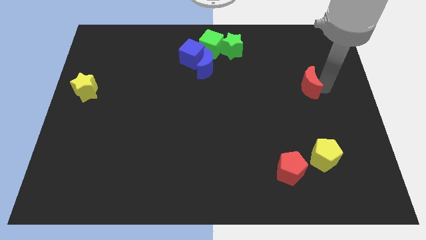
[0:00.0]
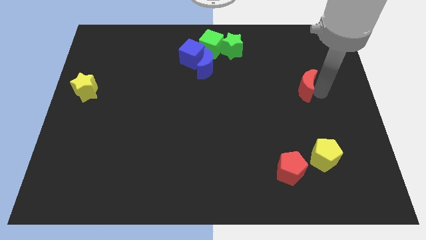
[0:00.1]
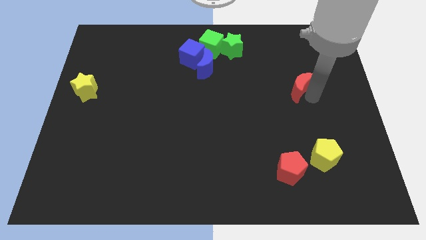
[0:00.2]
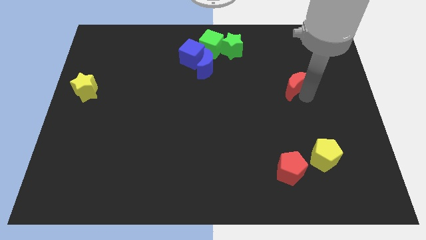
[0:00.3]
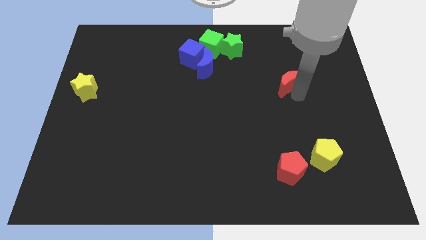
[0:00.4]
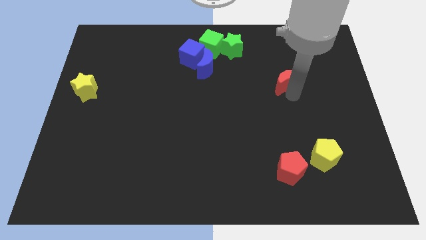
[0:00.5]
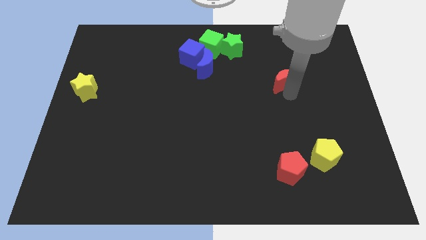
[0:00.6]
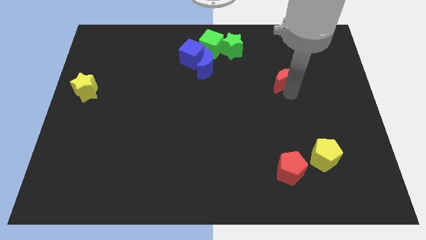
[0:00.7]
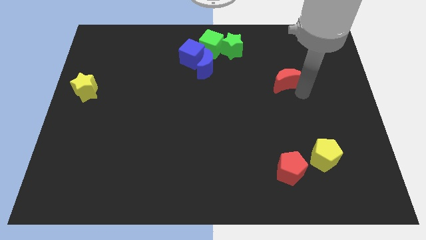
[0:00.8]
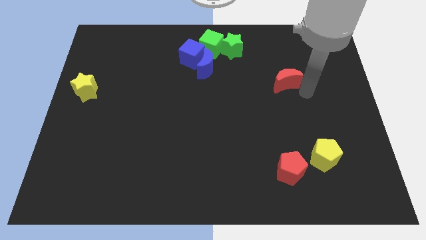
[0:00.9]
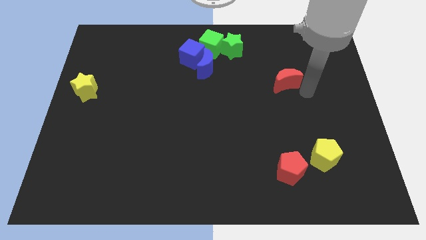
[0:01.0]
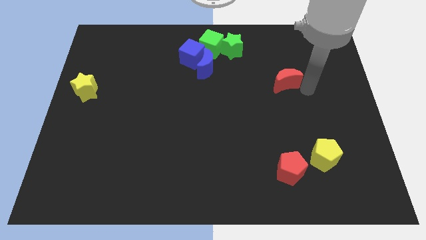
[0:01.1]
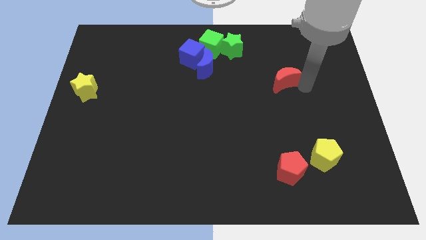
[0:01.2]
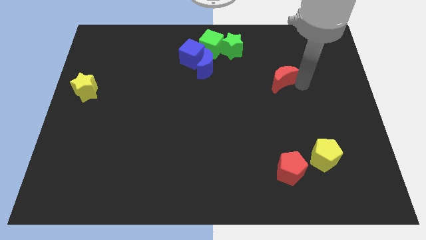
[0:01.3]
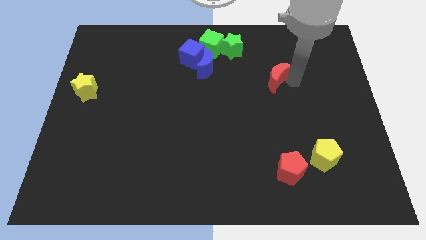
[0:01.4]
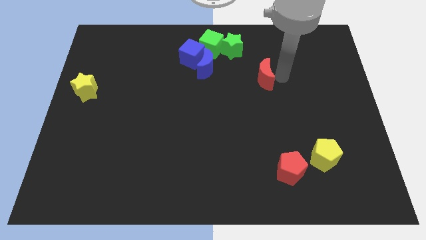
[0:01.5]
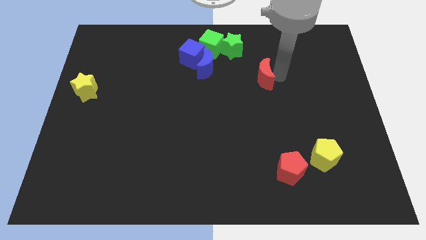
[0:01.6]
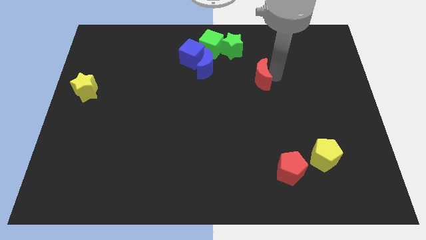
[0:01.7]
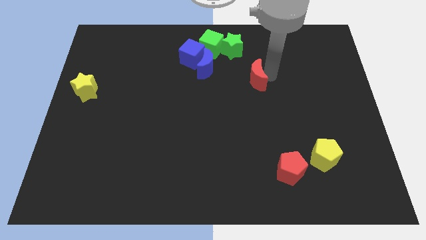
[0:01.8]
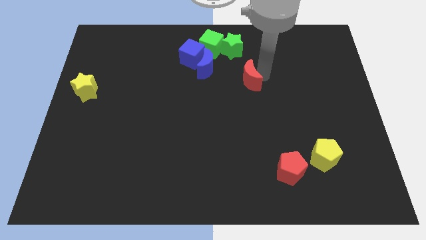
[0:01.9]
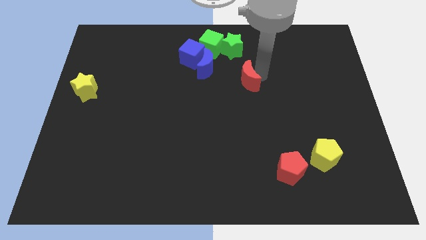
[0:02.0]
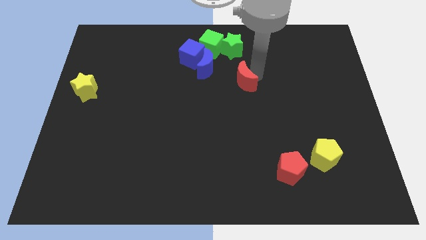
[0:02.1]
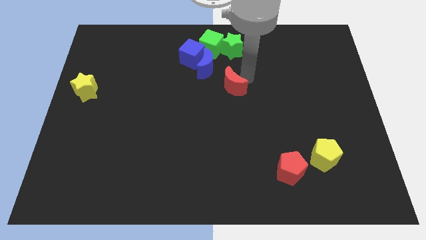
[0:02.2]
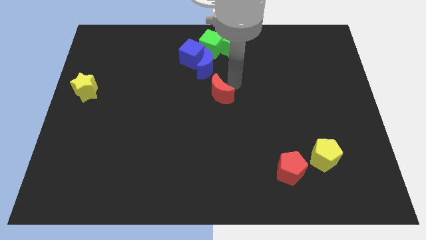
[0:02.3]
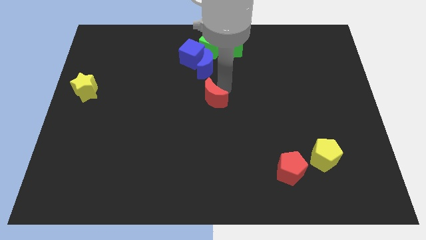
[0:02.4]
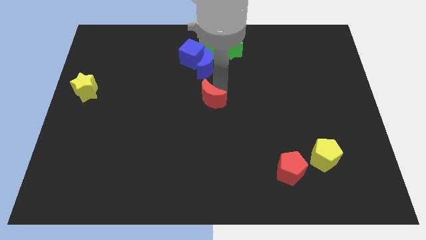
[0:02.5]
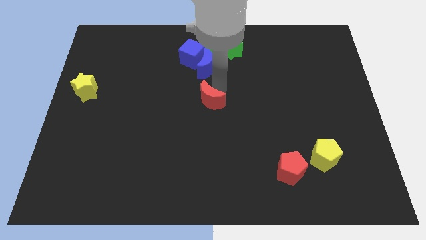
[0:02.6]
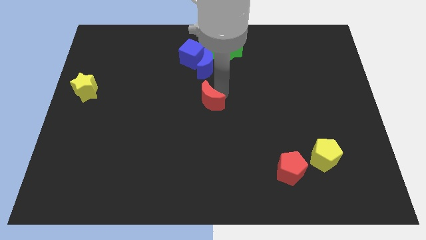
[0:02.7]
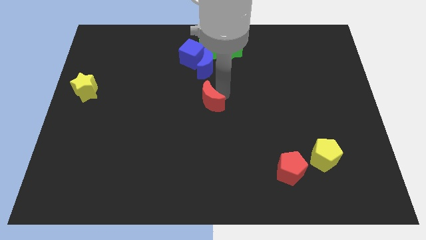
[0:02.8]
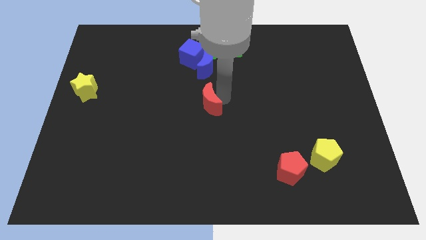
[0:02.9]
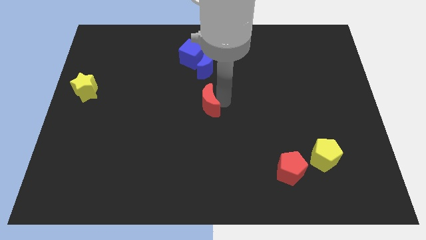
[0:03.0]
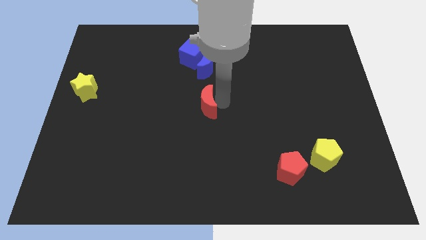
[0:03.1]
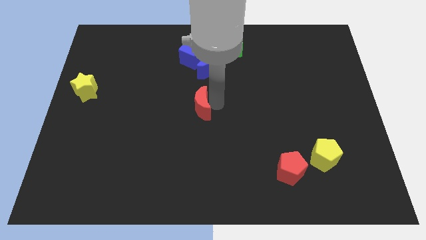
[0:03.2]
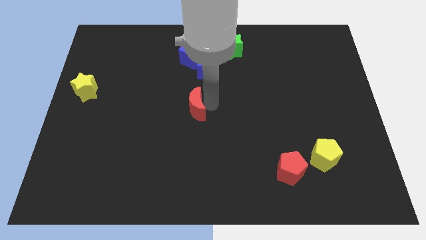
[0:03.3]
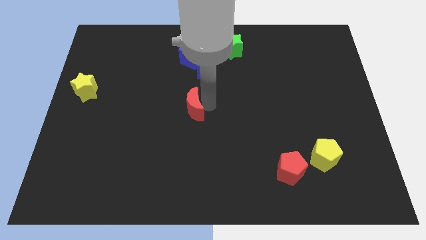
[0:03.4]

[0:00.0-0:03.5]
move red moon to the center

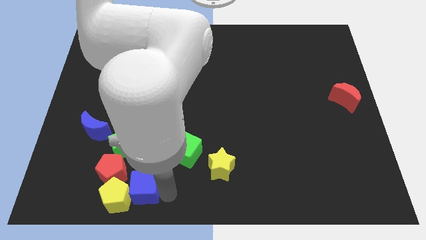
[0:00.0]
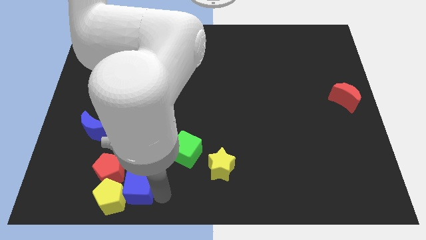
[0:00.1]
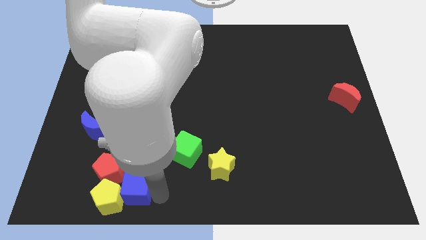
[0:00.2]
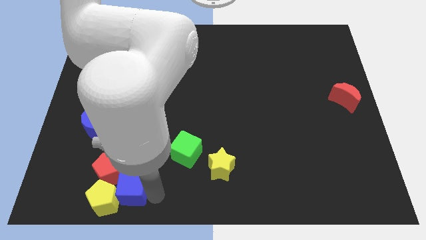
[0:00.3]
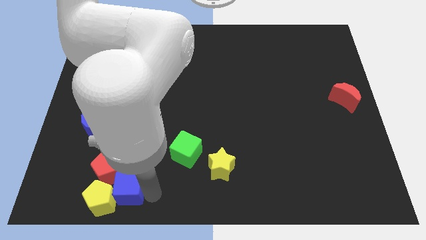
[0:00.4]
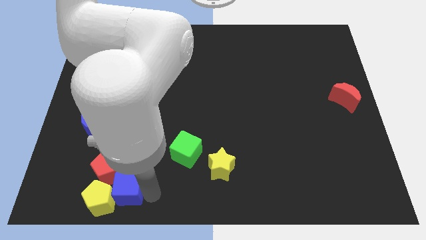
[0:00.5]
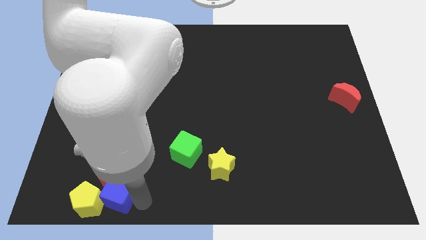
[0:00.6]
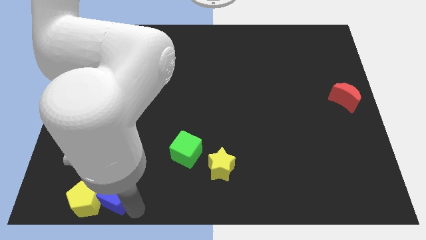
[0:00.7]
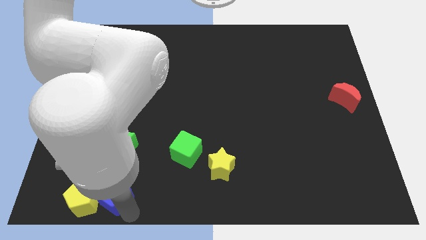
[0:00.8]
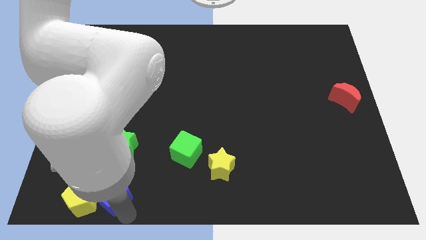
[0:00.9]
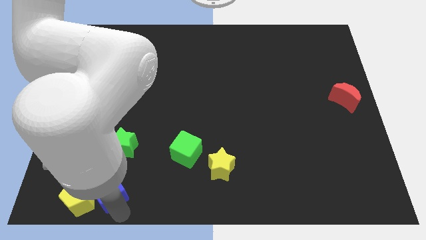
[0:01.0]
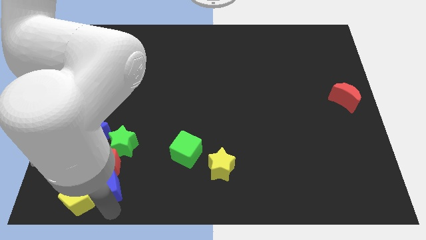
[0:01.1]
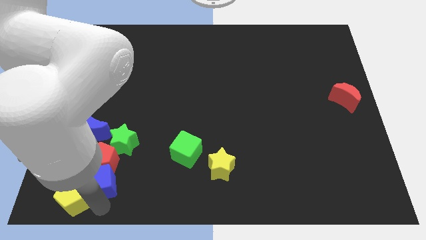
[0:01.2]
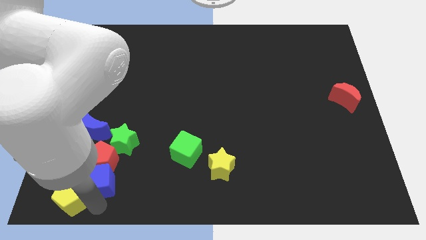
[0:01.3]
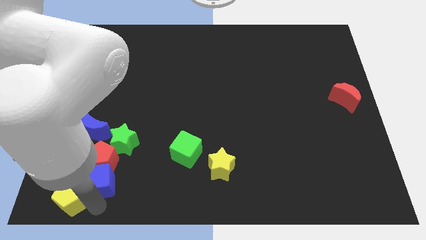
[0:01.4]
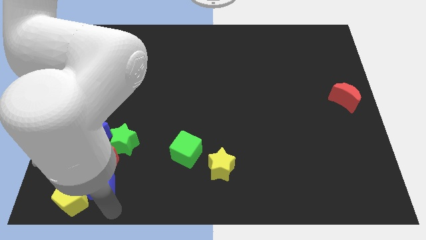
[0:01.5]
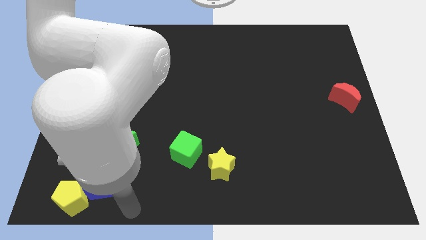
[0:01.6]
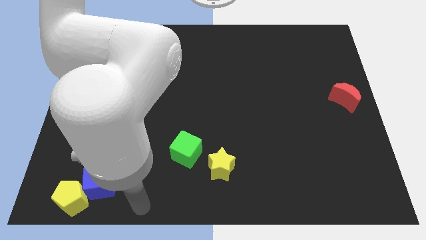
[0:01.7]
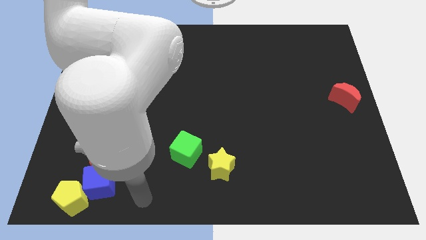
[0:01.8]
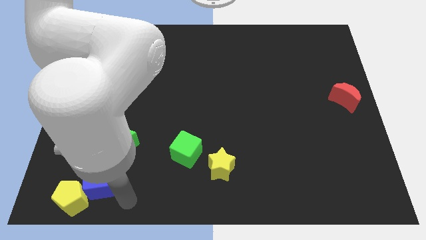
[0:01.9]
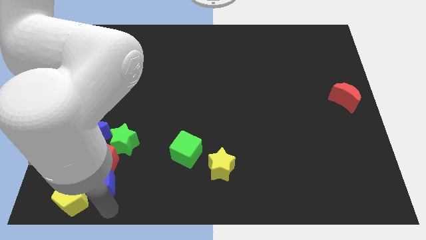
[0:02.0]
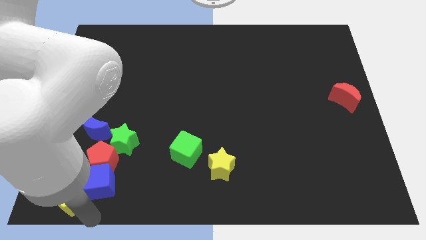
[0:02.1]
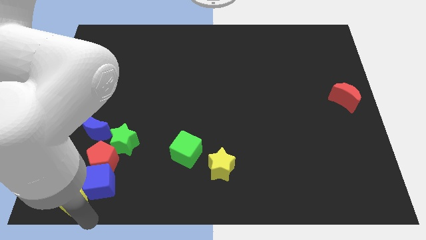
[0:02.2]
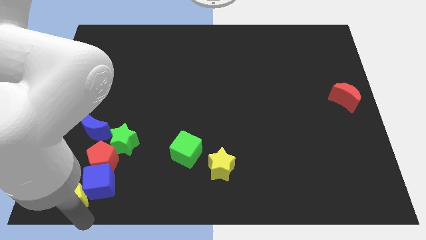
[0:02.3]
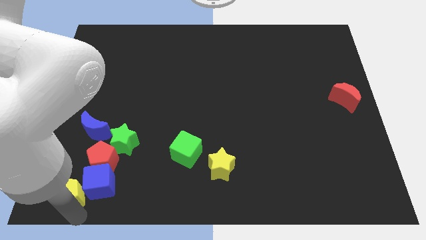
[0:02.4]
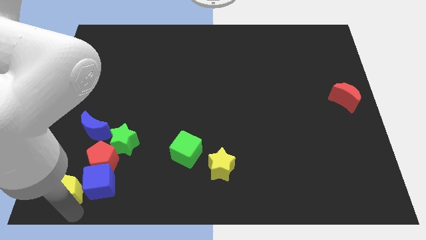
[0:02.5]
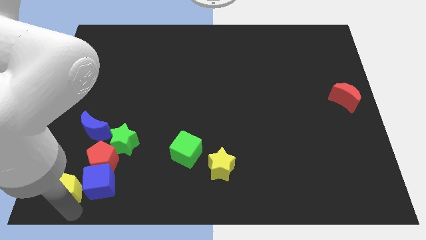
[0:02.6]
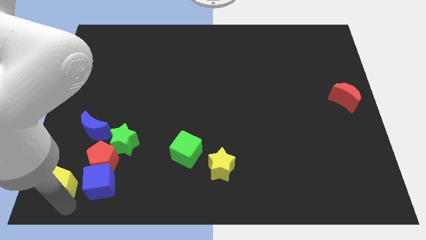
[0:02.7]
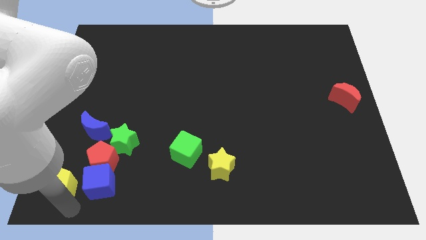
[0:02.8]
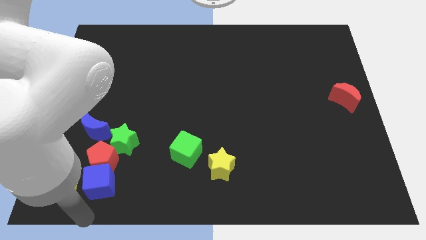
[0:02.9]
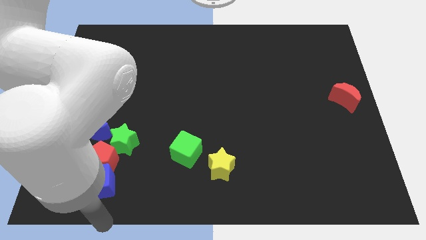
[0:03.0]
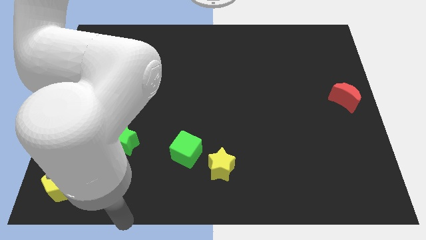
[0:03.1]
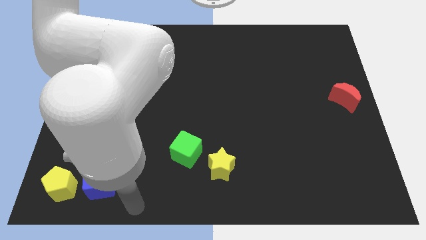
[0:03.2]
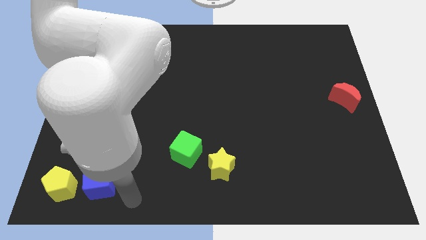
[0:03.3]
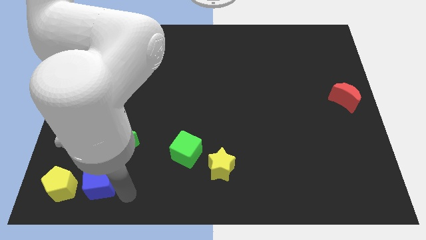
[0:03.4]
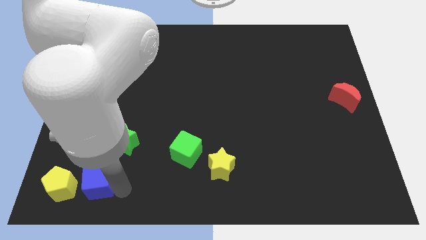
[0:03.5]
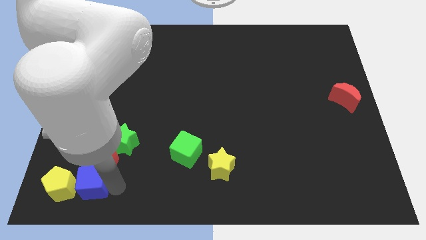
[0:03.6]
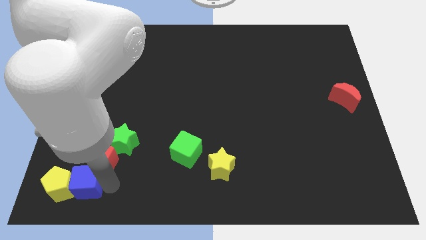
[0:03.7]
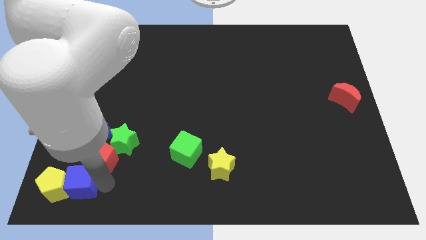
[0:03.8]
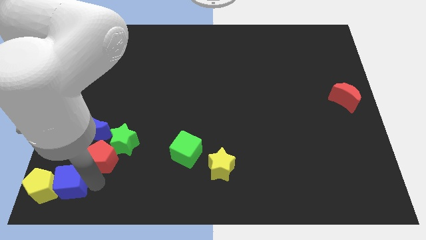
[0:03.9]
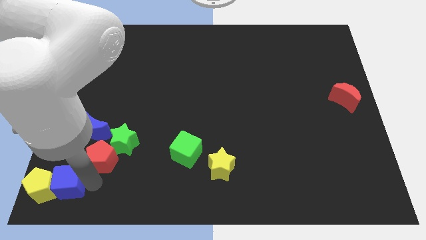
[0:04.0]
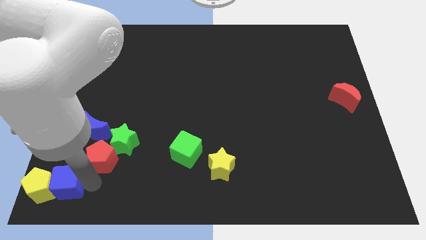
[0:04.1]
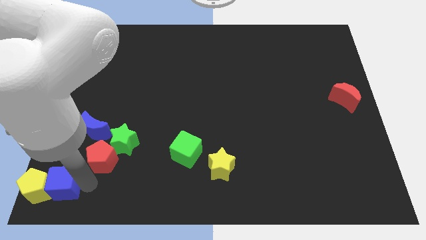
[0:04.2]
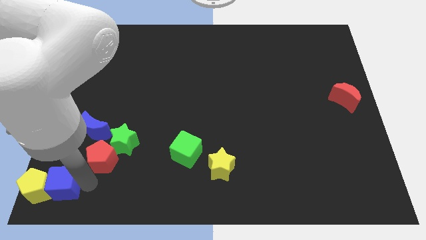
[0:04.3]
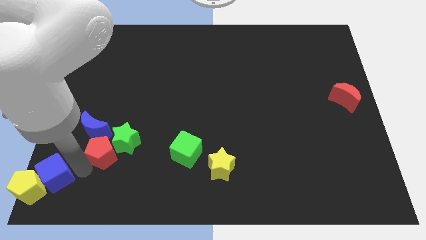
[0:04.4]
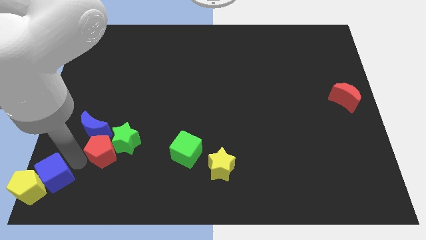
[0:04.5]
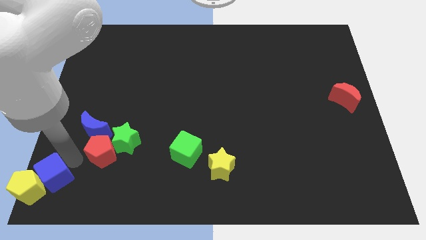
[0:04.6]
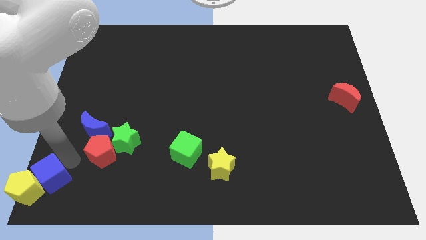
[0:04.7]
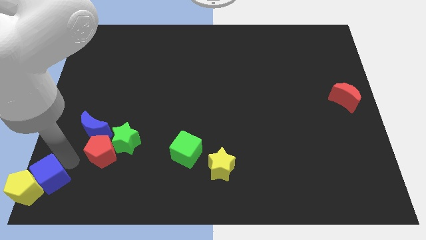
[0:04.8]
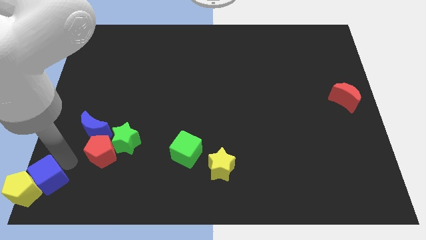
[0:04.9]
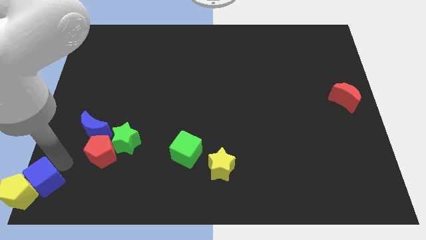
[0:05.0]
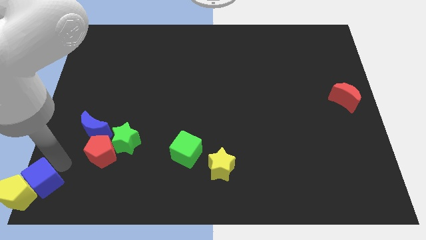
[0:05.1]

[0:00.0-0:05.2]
slide blue cube along with yellow pentagon to the bottom left

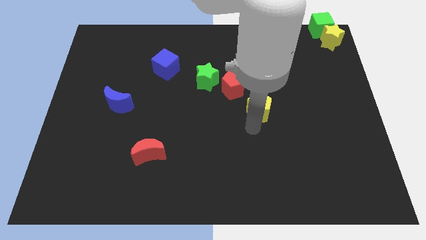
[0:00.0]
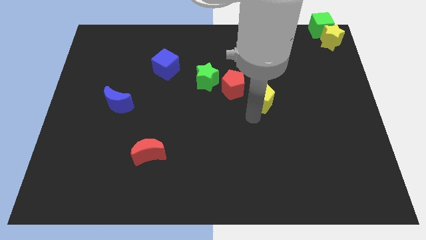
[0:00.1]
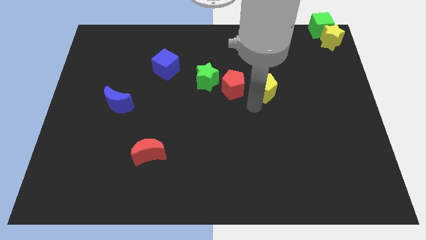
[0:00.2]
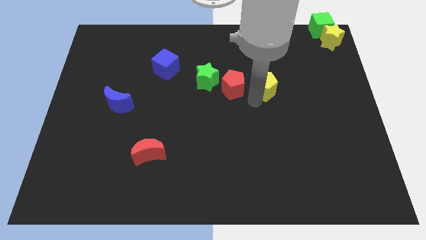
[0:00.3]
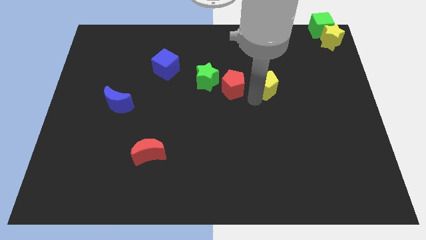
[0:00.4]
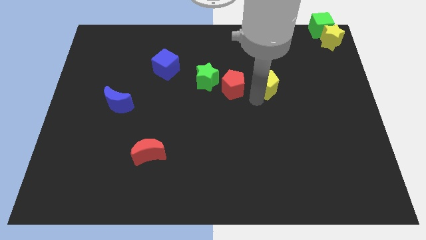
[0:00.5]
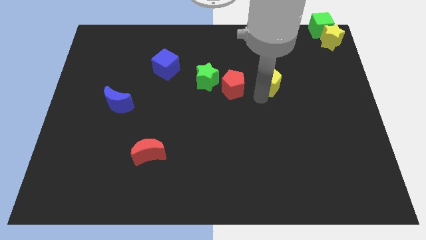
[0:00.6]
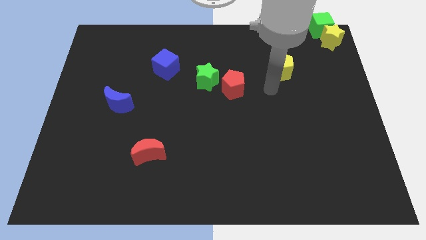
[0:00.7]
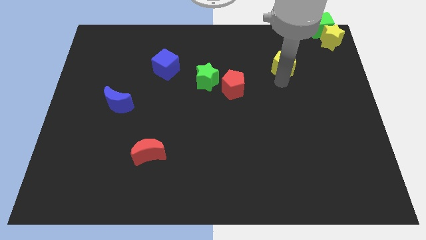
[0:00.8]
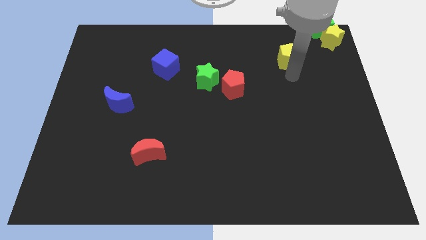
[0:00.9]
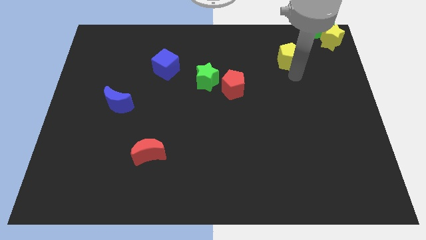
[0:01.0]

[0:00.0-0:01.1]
move the yellow pentagon towards the green cube
